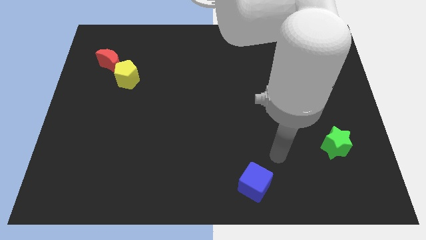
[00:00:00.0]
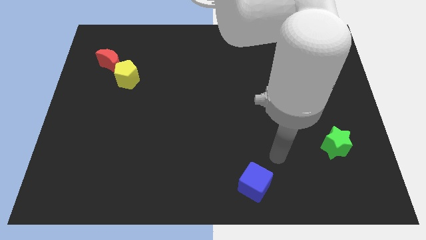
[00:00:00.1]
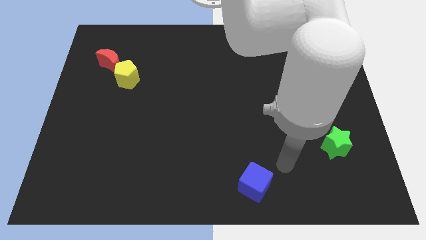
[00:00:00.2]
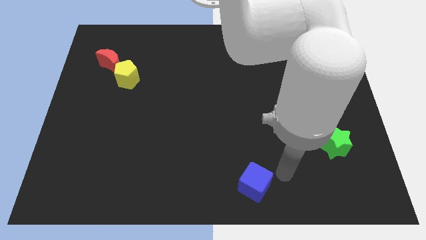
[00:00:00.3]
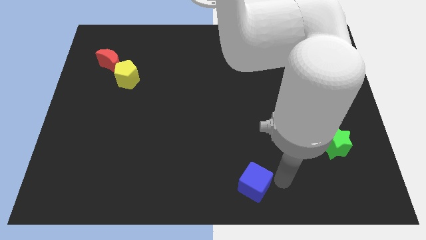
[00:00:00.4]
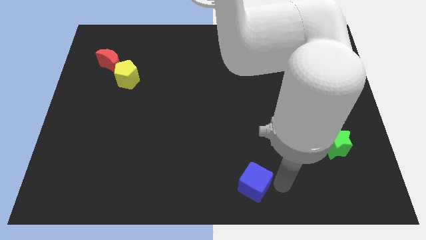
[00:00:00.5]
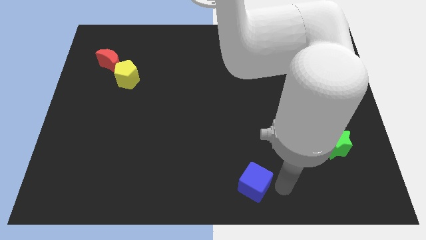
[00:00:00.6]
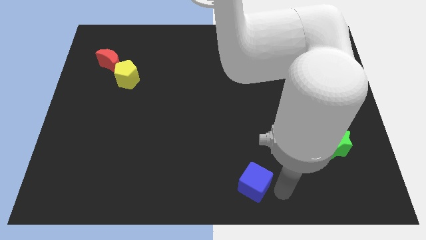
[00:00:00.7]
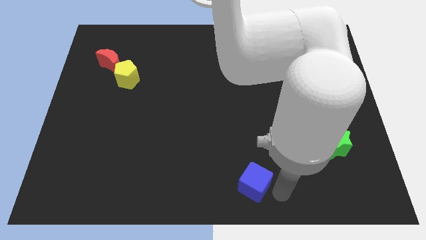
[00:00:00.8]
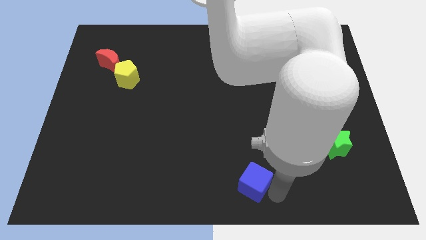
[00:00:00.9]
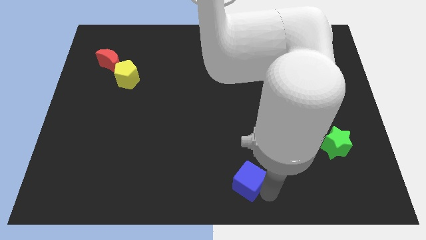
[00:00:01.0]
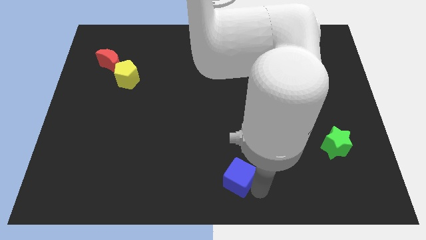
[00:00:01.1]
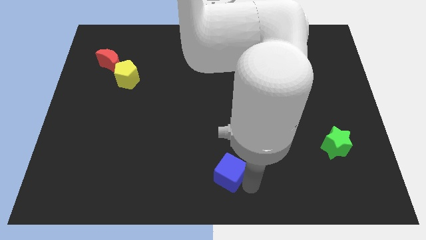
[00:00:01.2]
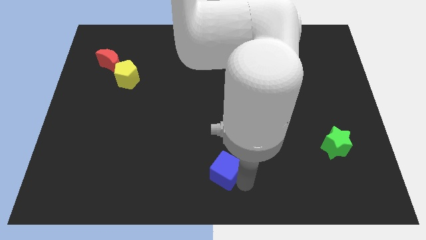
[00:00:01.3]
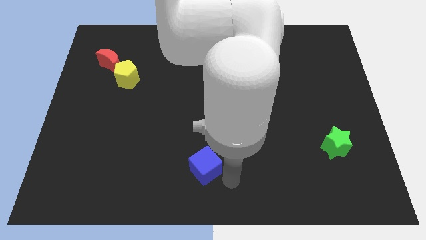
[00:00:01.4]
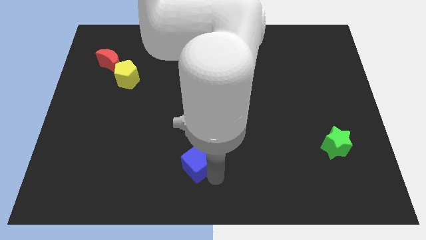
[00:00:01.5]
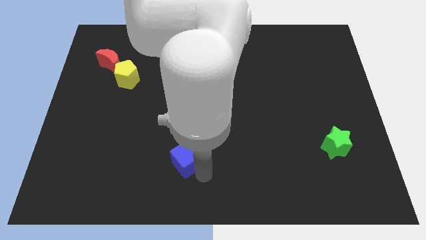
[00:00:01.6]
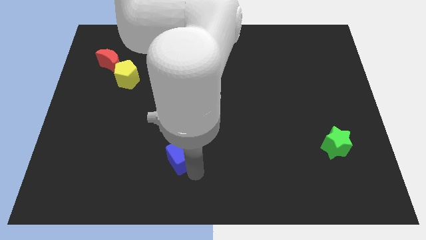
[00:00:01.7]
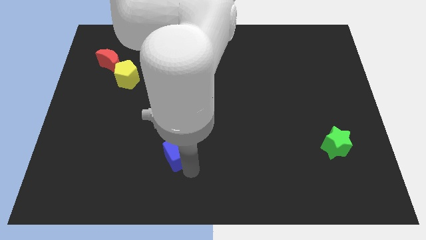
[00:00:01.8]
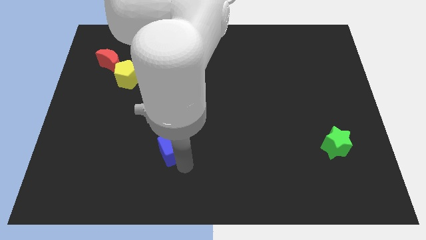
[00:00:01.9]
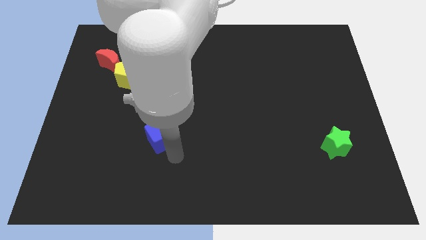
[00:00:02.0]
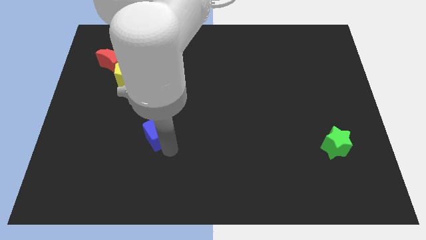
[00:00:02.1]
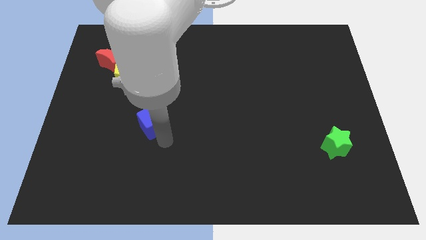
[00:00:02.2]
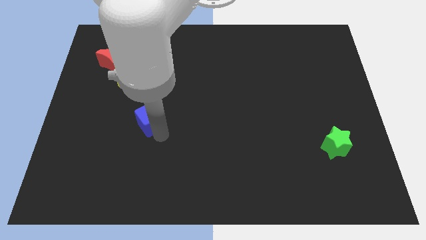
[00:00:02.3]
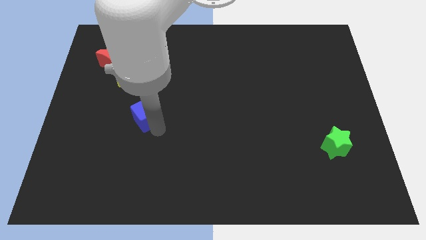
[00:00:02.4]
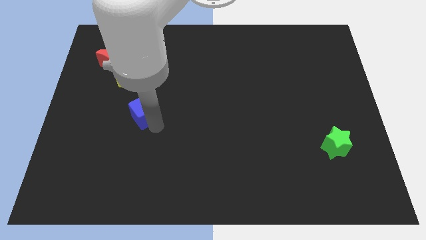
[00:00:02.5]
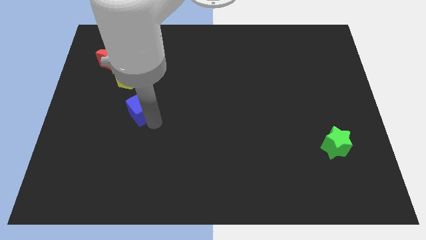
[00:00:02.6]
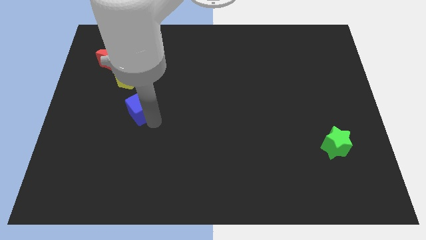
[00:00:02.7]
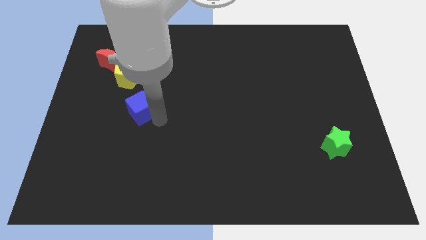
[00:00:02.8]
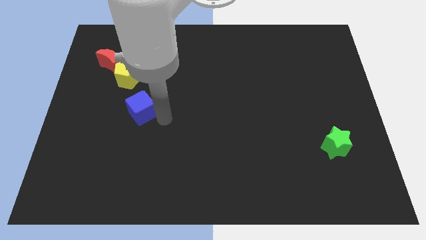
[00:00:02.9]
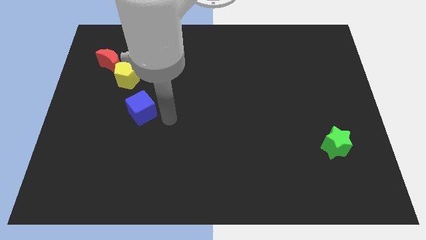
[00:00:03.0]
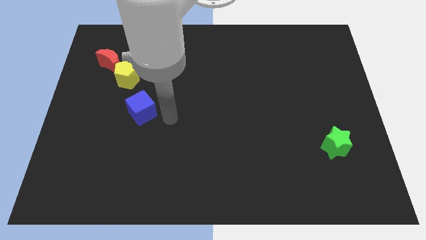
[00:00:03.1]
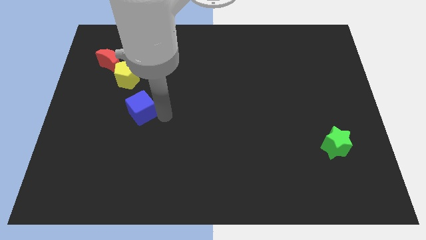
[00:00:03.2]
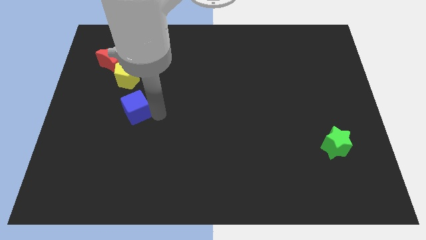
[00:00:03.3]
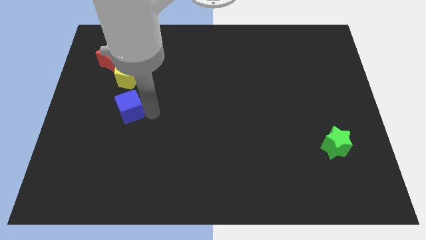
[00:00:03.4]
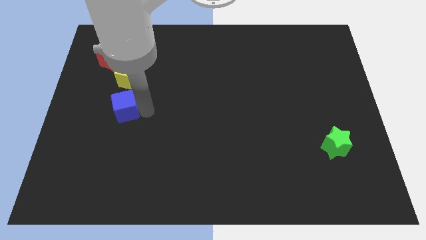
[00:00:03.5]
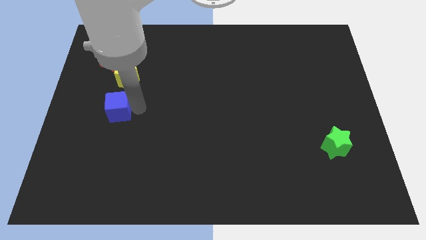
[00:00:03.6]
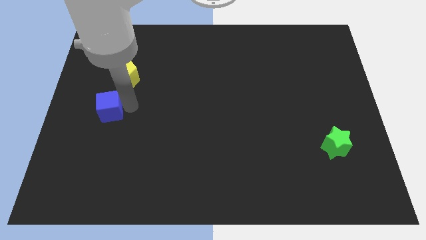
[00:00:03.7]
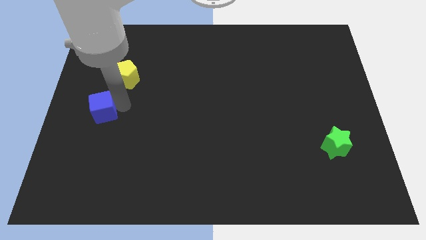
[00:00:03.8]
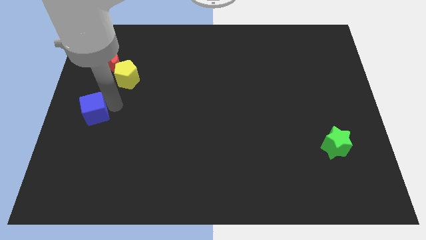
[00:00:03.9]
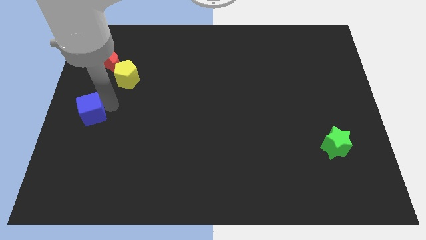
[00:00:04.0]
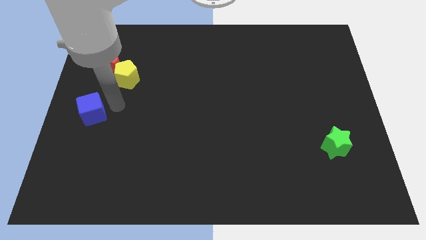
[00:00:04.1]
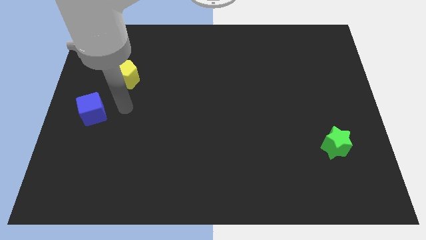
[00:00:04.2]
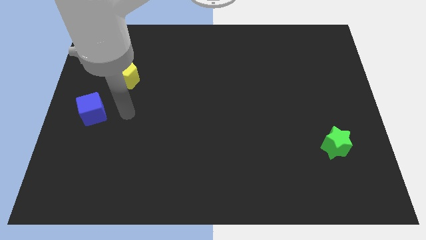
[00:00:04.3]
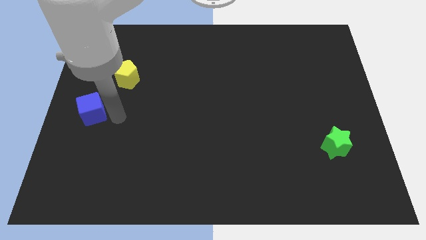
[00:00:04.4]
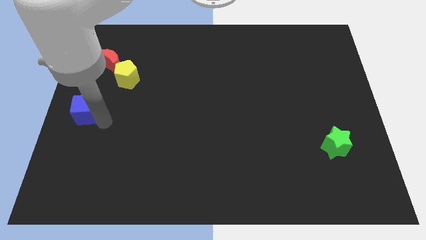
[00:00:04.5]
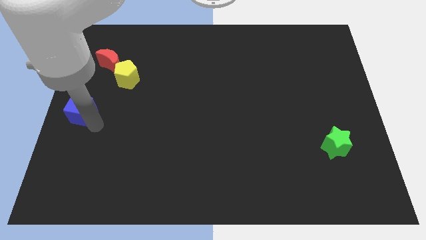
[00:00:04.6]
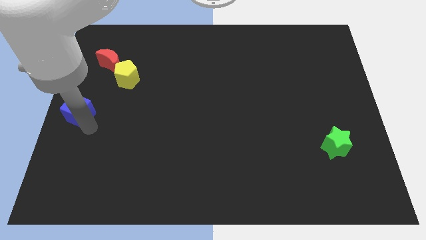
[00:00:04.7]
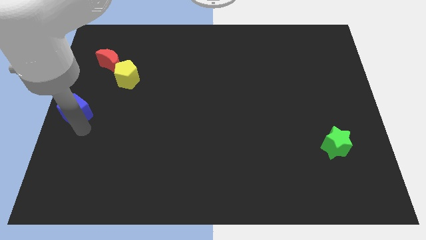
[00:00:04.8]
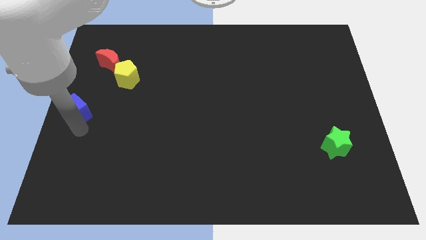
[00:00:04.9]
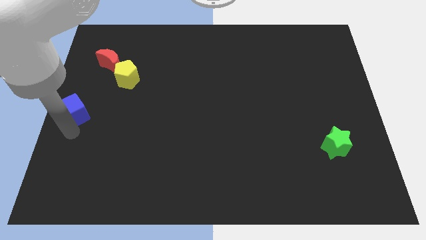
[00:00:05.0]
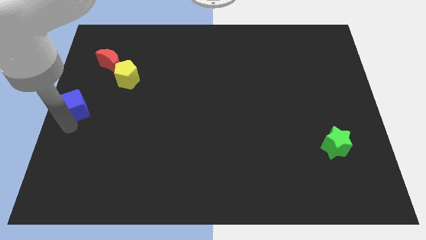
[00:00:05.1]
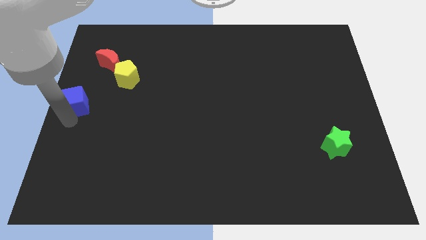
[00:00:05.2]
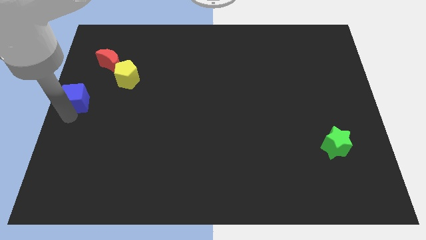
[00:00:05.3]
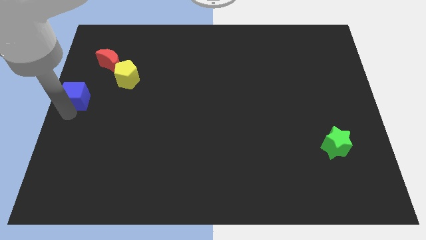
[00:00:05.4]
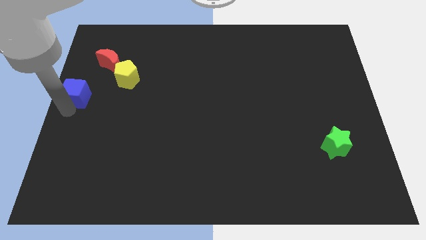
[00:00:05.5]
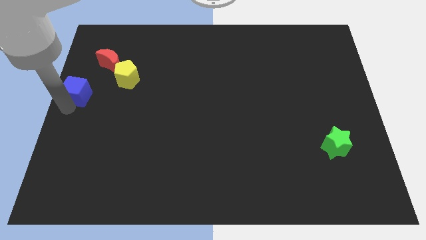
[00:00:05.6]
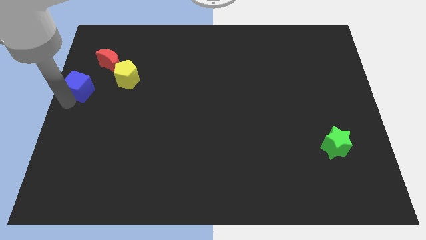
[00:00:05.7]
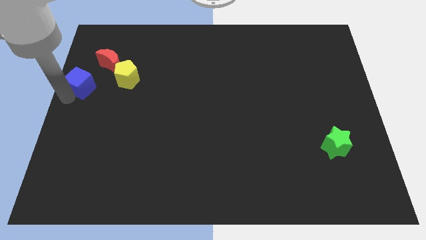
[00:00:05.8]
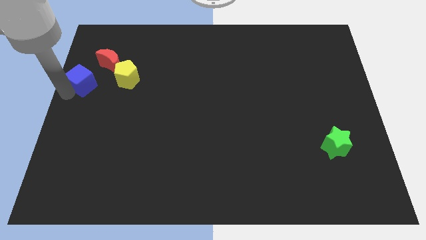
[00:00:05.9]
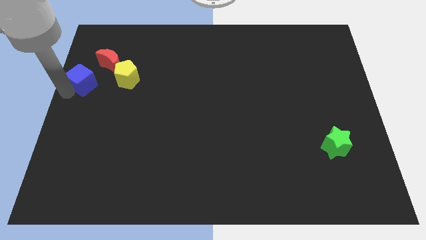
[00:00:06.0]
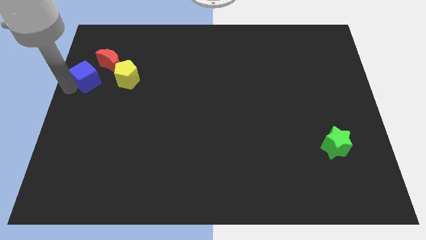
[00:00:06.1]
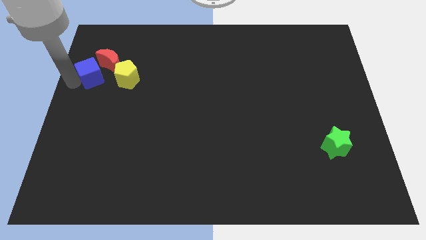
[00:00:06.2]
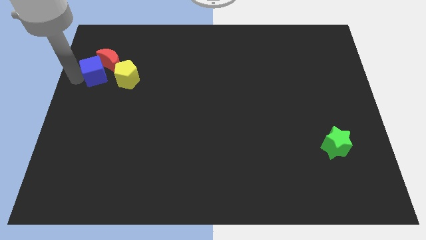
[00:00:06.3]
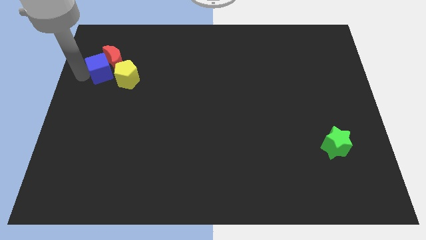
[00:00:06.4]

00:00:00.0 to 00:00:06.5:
move the cube to the red block

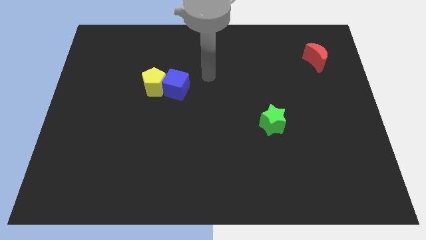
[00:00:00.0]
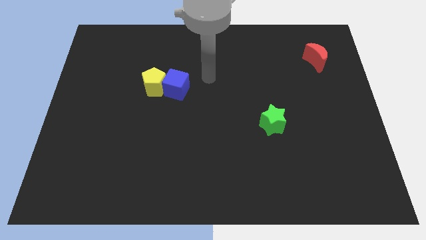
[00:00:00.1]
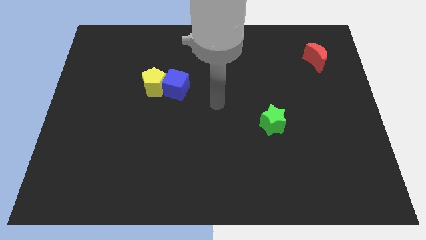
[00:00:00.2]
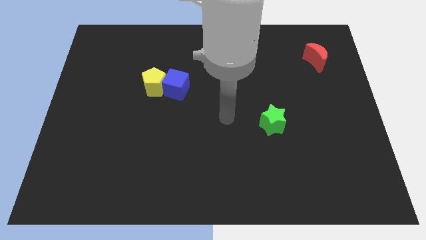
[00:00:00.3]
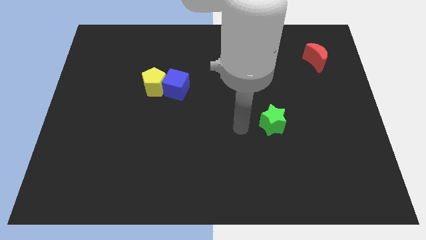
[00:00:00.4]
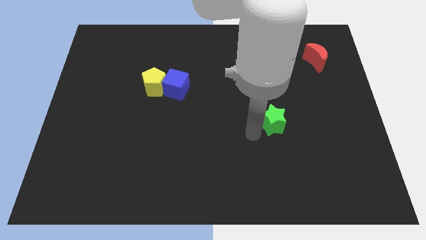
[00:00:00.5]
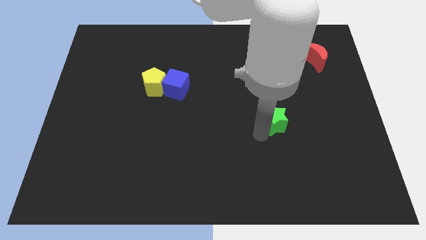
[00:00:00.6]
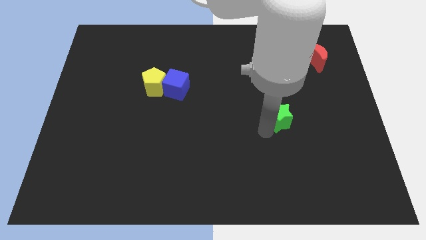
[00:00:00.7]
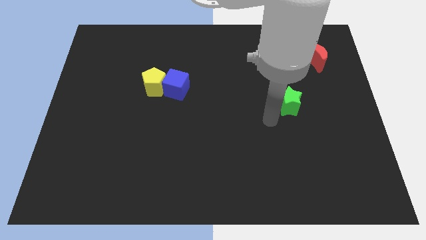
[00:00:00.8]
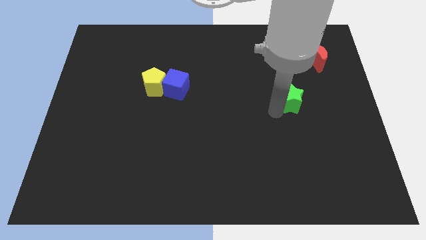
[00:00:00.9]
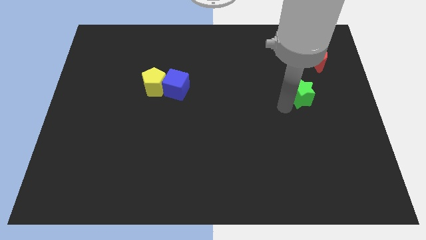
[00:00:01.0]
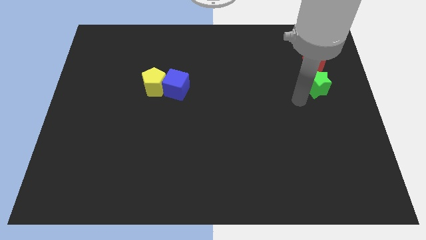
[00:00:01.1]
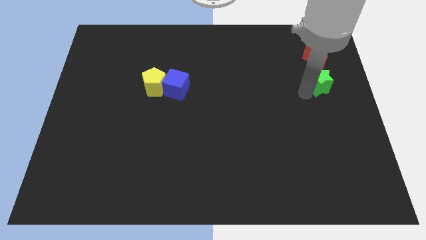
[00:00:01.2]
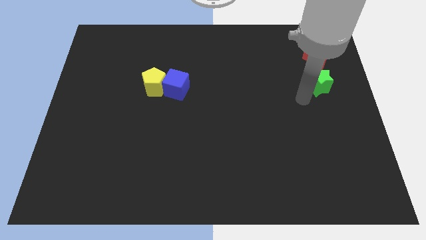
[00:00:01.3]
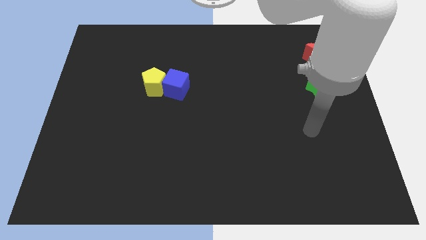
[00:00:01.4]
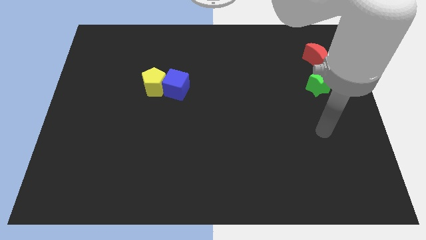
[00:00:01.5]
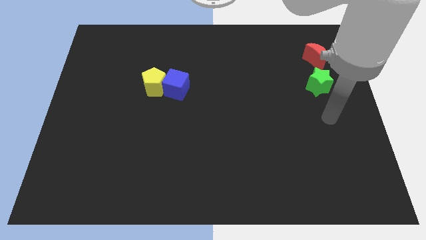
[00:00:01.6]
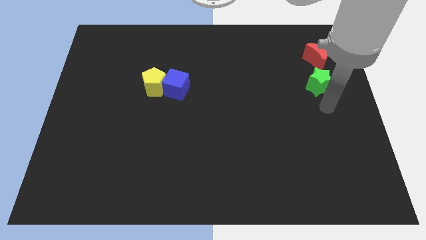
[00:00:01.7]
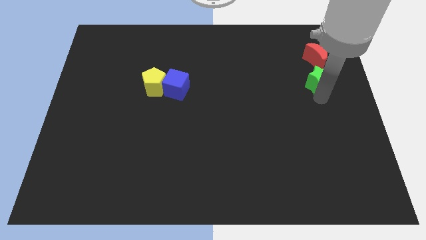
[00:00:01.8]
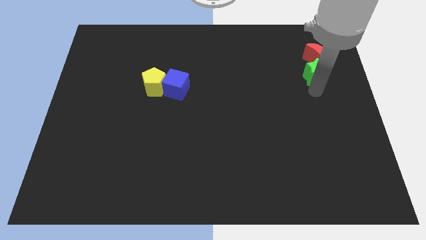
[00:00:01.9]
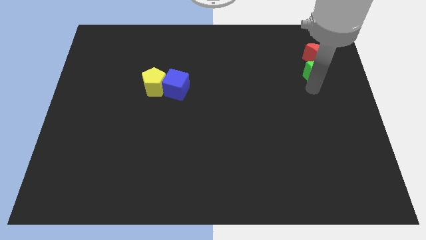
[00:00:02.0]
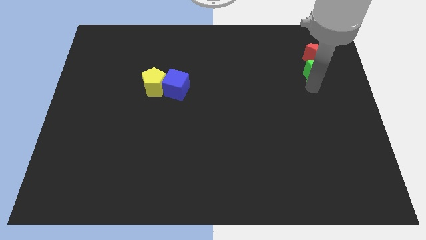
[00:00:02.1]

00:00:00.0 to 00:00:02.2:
move the green star close to the red moon
